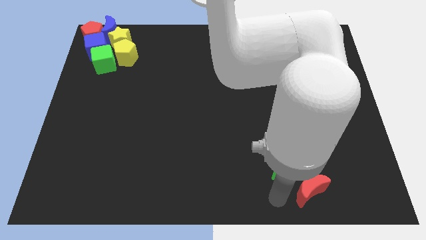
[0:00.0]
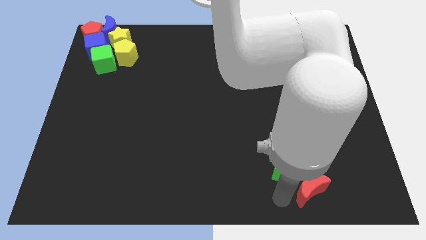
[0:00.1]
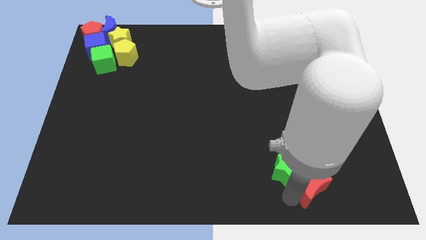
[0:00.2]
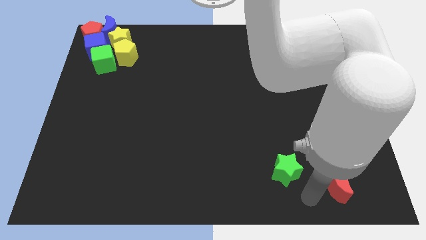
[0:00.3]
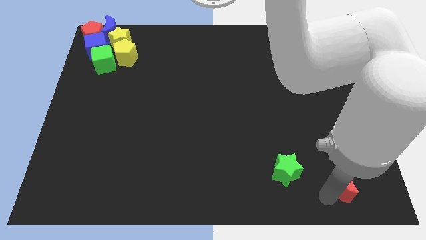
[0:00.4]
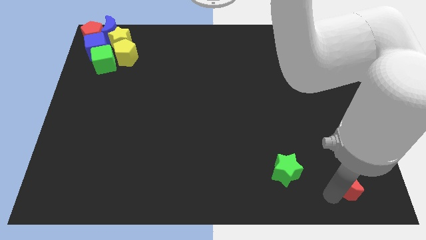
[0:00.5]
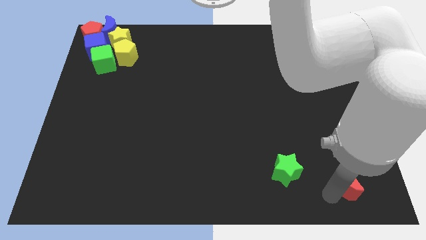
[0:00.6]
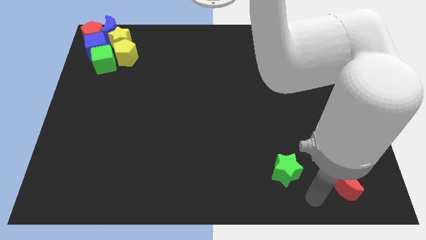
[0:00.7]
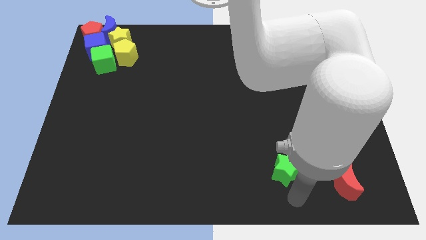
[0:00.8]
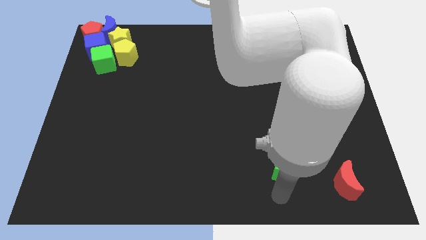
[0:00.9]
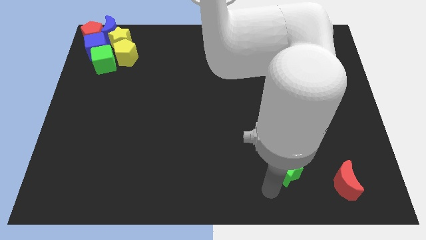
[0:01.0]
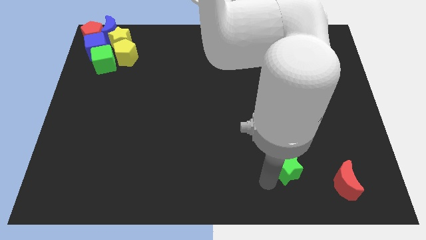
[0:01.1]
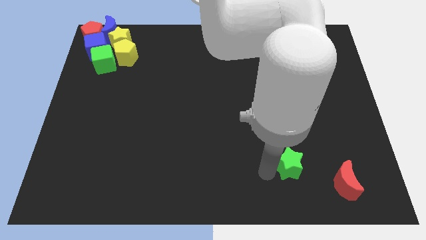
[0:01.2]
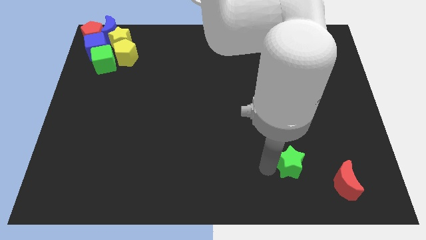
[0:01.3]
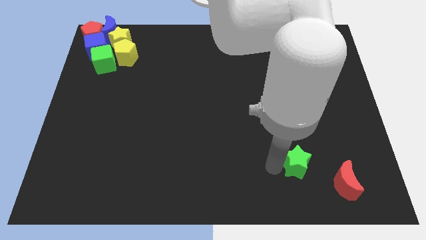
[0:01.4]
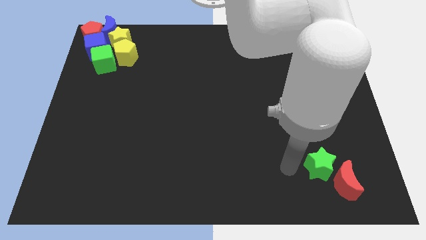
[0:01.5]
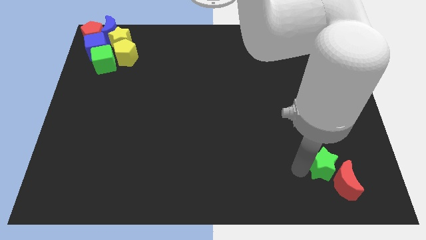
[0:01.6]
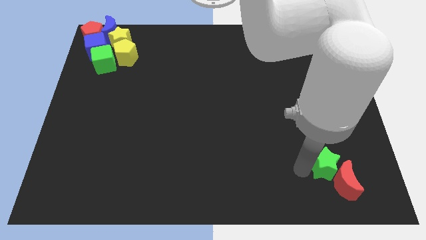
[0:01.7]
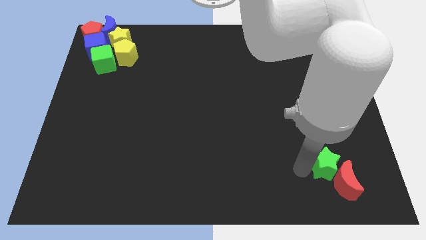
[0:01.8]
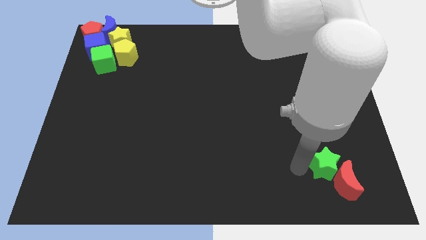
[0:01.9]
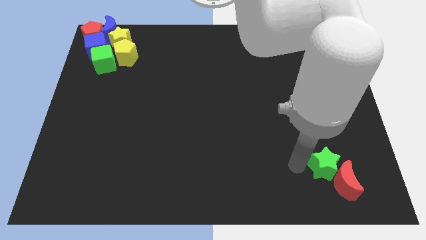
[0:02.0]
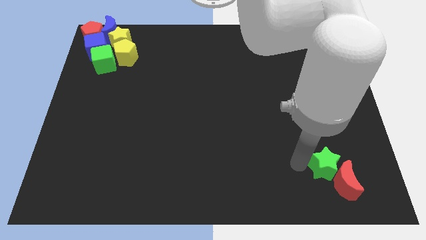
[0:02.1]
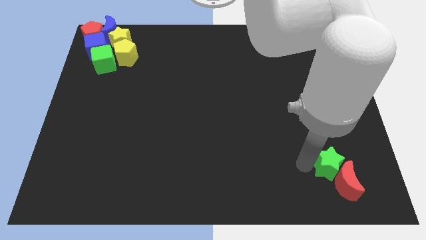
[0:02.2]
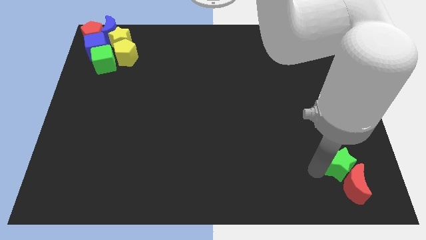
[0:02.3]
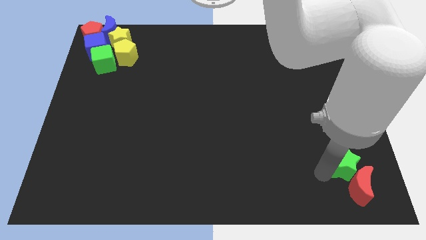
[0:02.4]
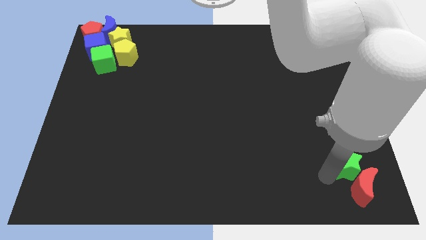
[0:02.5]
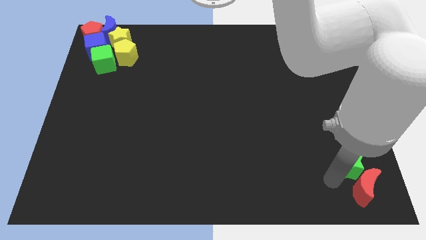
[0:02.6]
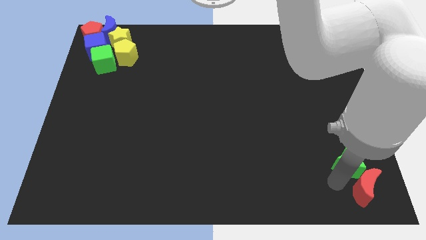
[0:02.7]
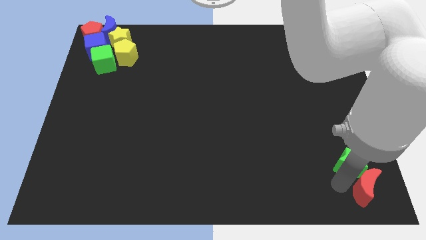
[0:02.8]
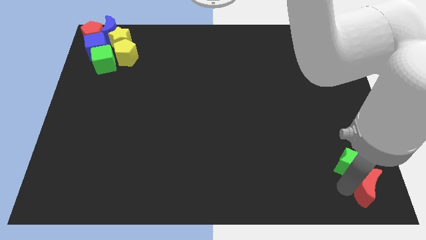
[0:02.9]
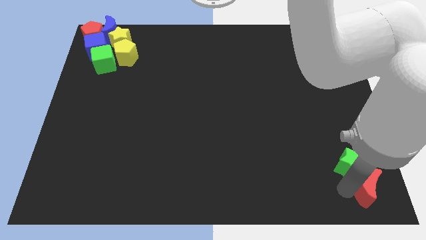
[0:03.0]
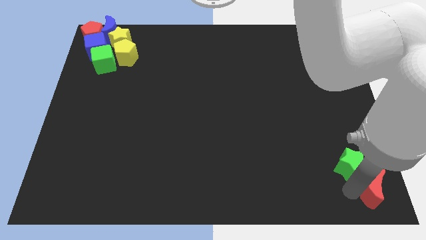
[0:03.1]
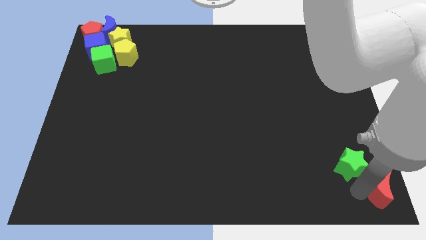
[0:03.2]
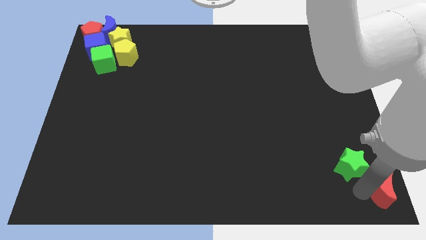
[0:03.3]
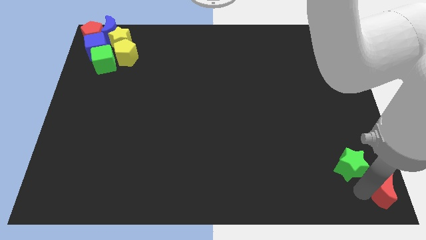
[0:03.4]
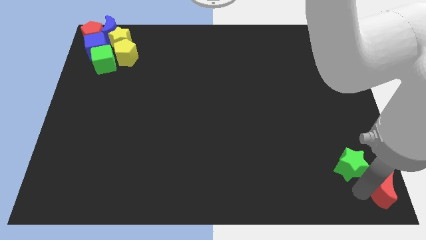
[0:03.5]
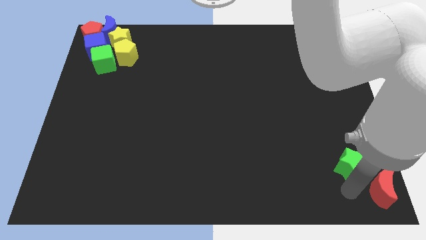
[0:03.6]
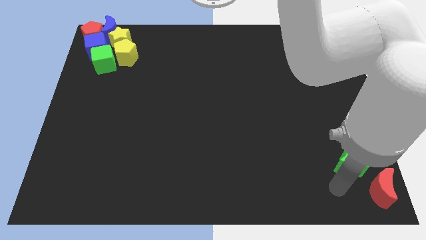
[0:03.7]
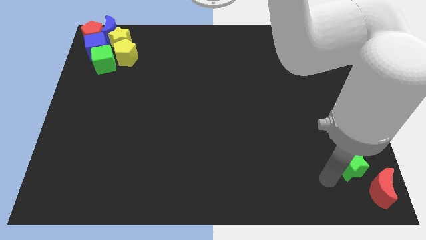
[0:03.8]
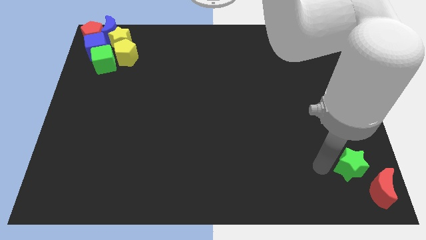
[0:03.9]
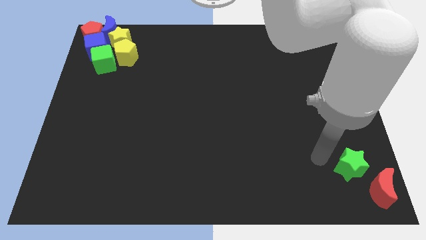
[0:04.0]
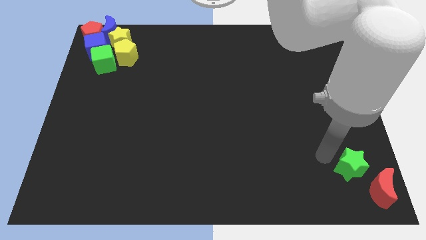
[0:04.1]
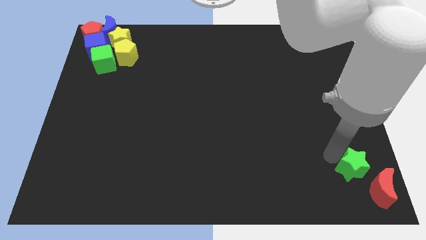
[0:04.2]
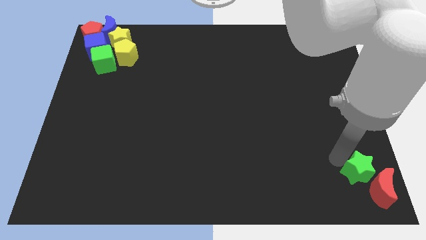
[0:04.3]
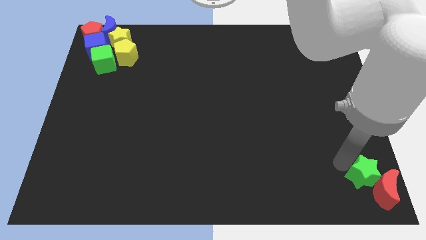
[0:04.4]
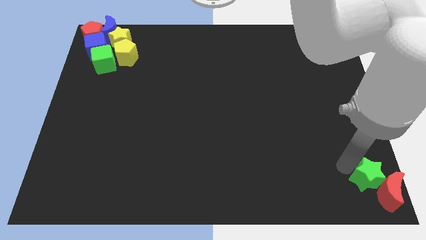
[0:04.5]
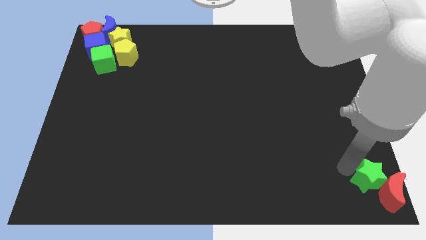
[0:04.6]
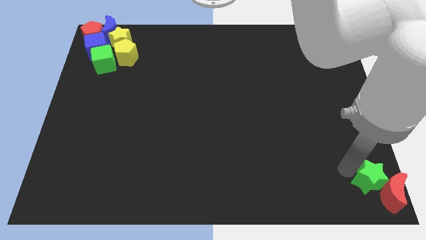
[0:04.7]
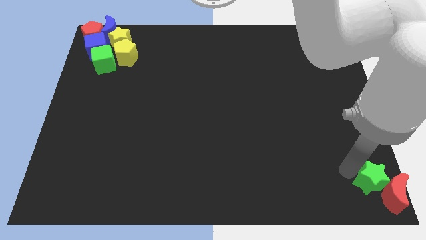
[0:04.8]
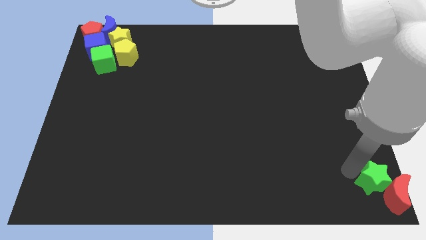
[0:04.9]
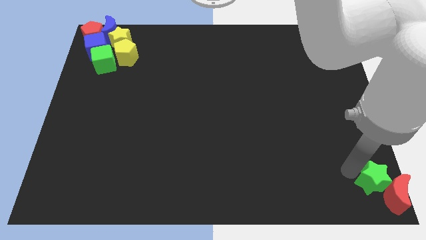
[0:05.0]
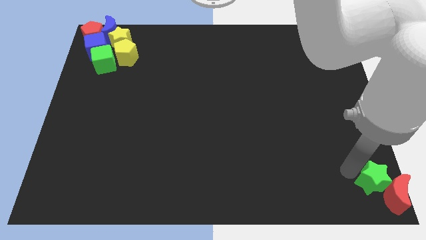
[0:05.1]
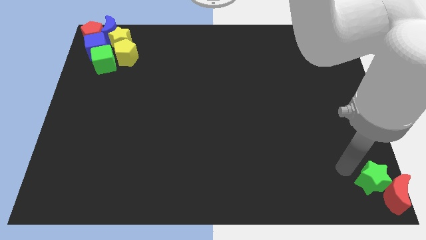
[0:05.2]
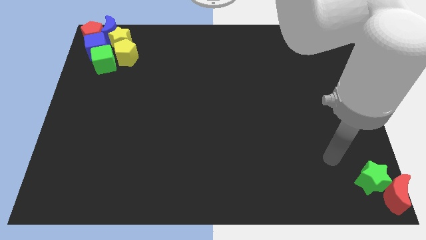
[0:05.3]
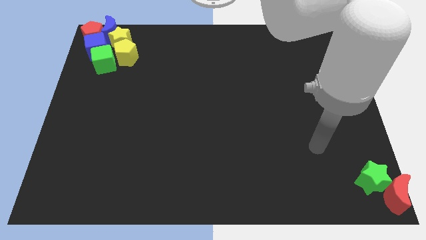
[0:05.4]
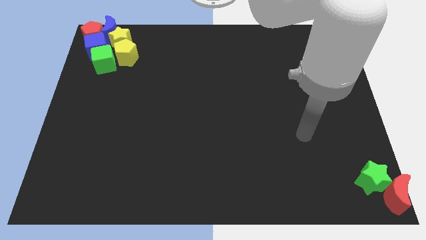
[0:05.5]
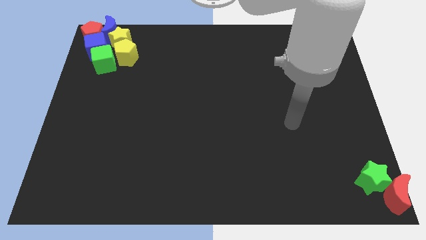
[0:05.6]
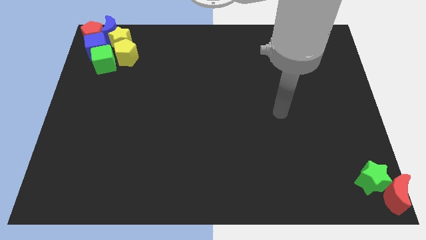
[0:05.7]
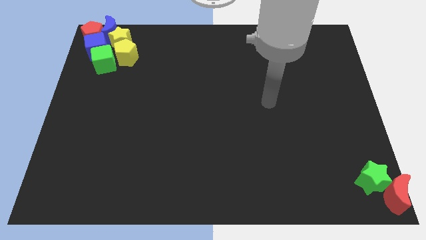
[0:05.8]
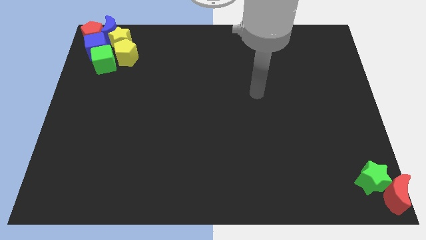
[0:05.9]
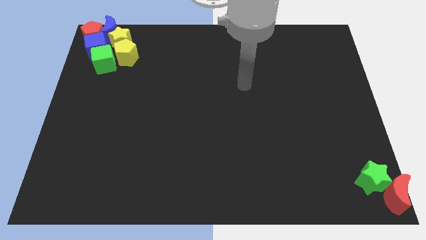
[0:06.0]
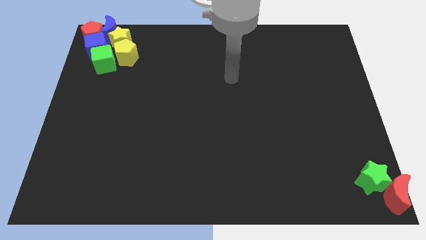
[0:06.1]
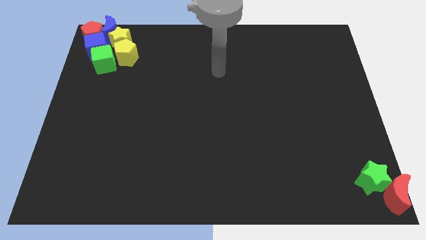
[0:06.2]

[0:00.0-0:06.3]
place the red crescent and the green star at the bottom left of the board

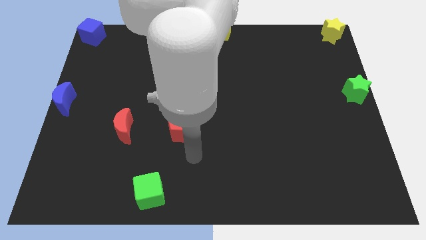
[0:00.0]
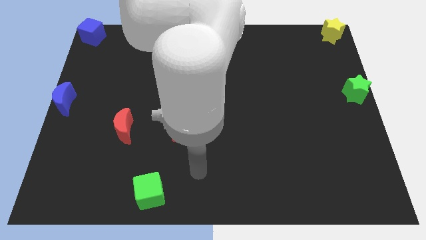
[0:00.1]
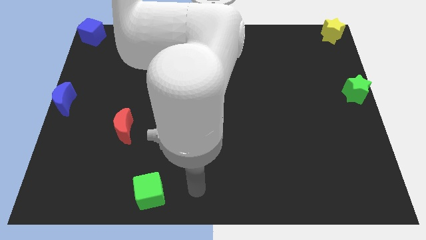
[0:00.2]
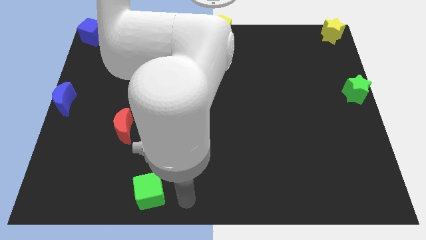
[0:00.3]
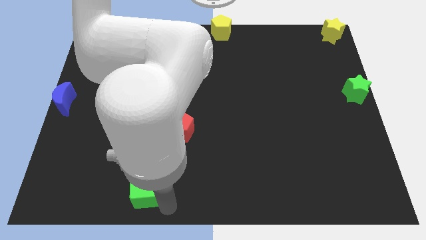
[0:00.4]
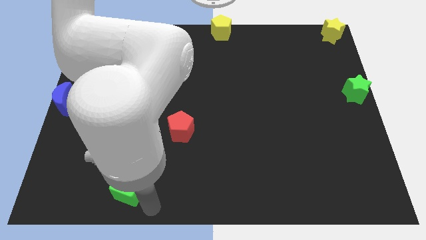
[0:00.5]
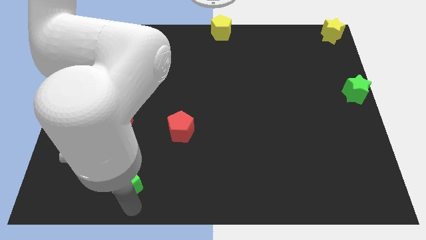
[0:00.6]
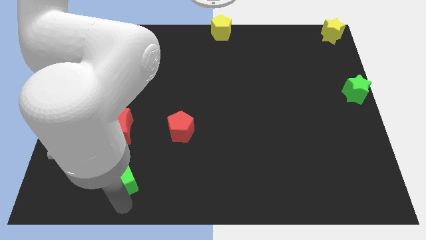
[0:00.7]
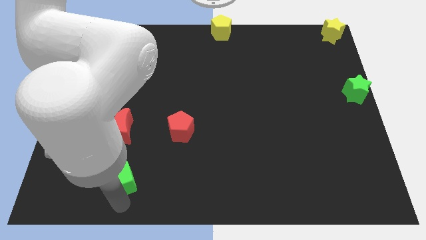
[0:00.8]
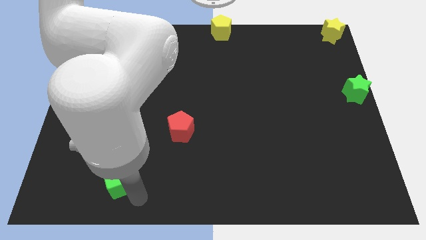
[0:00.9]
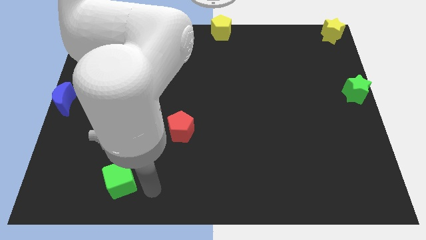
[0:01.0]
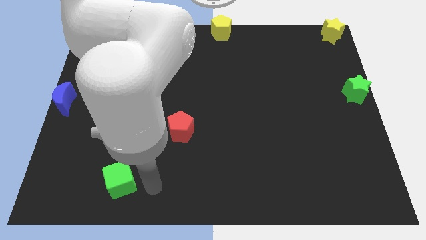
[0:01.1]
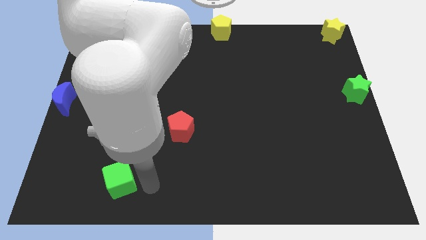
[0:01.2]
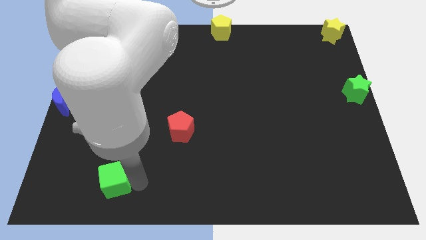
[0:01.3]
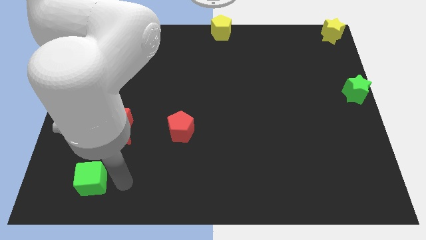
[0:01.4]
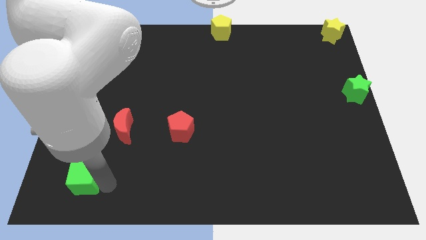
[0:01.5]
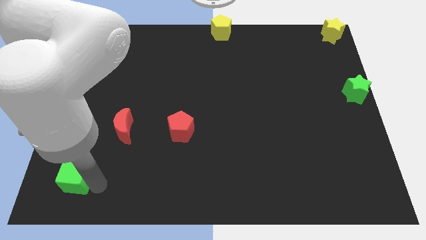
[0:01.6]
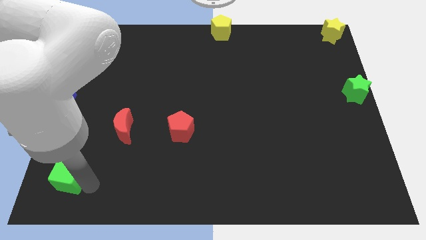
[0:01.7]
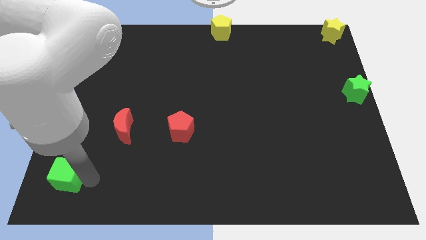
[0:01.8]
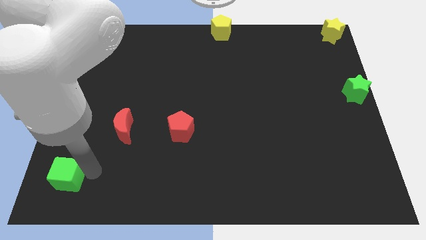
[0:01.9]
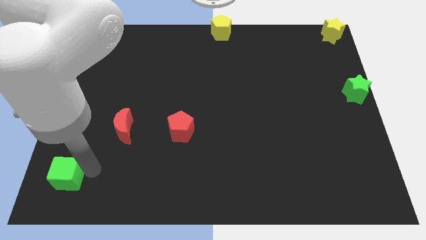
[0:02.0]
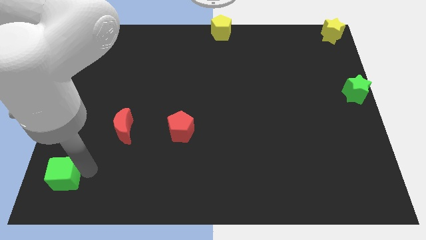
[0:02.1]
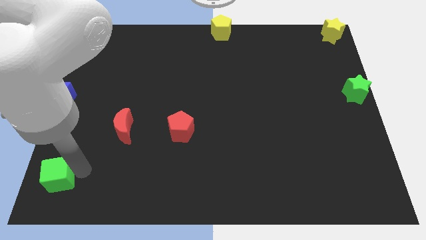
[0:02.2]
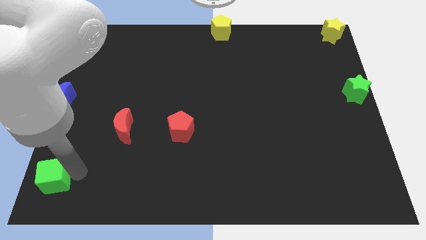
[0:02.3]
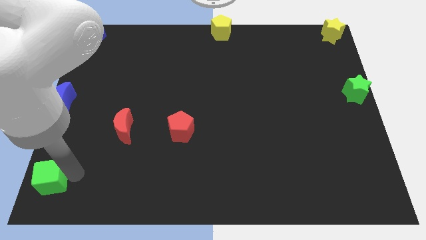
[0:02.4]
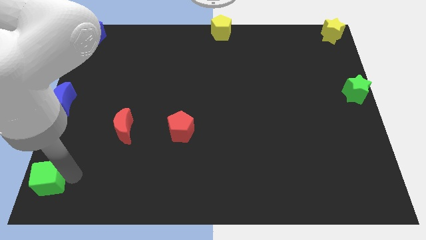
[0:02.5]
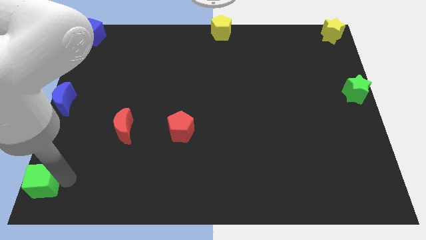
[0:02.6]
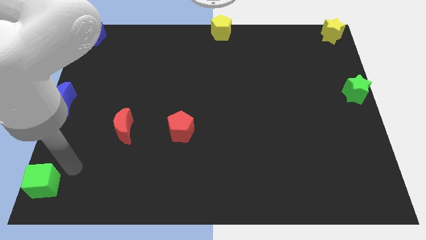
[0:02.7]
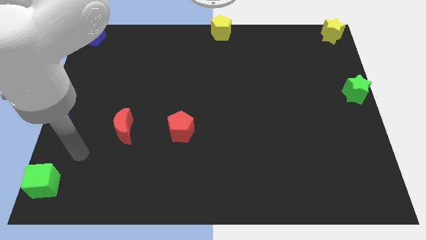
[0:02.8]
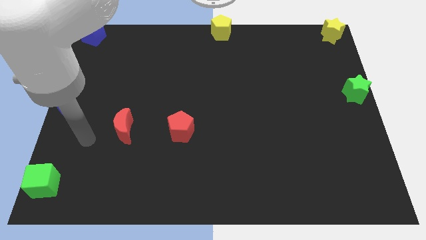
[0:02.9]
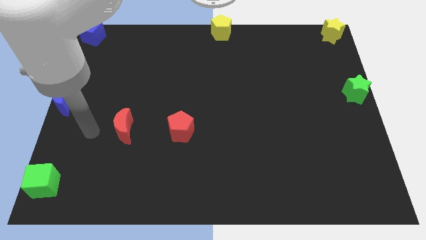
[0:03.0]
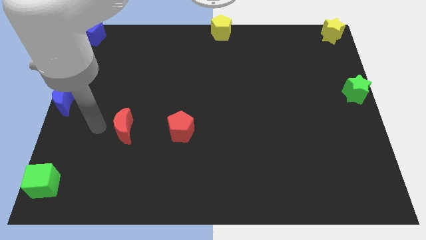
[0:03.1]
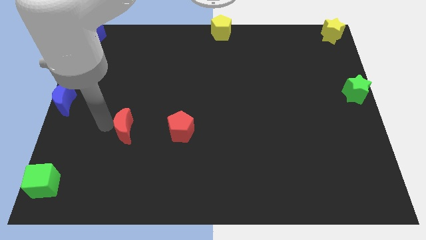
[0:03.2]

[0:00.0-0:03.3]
place the green cube vertically below the blue crescent
